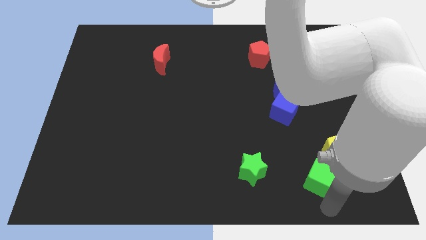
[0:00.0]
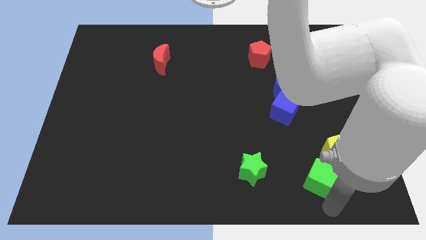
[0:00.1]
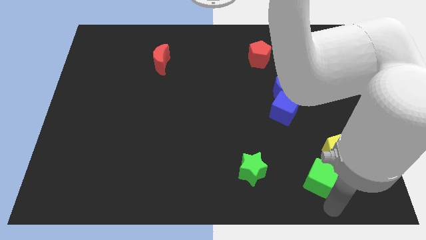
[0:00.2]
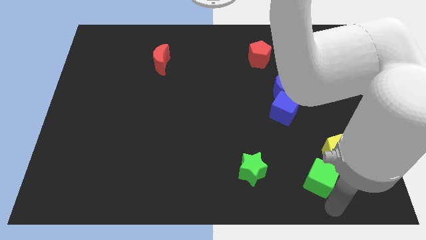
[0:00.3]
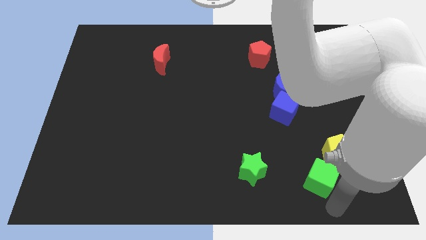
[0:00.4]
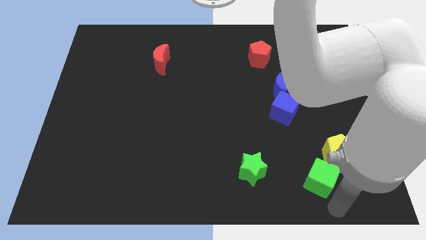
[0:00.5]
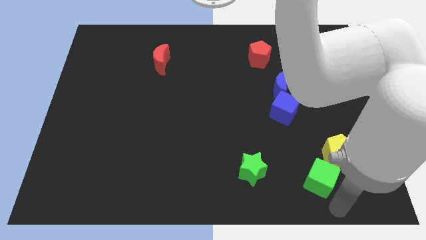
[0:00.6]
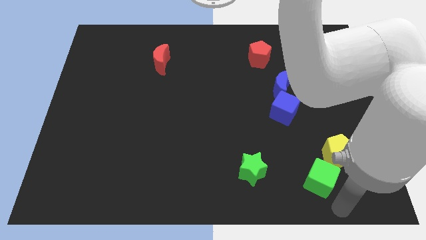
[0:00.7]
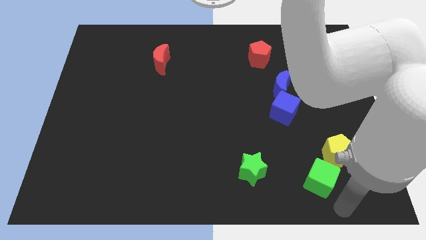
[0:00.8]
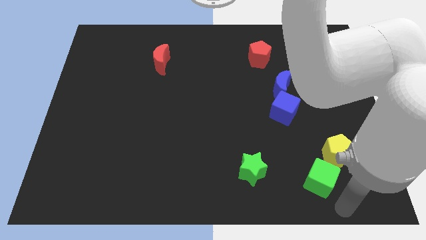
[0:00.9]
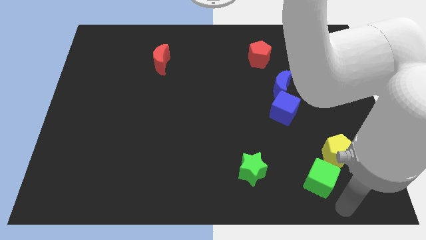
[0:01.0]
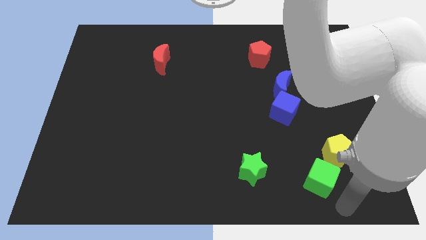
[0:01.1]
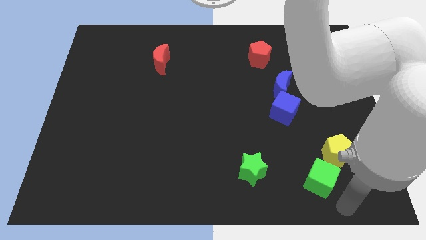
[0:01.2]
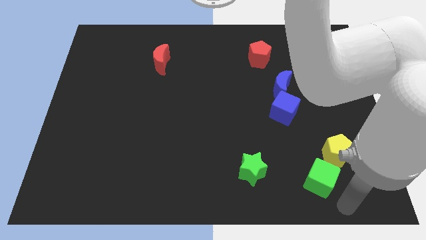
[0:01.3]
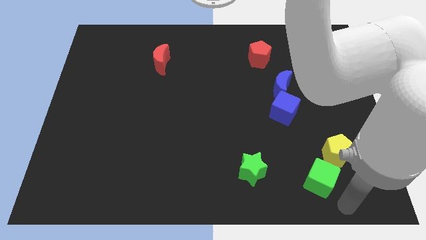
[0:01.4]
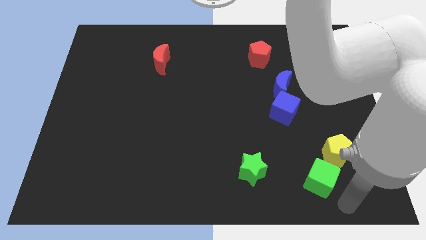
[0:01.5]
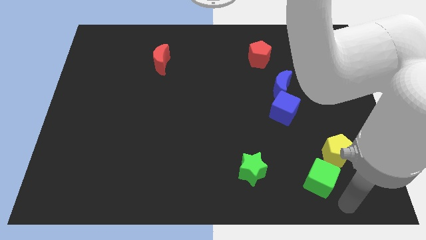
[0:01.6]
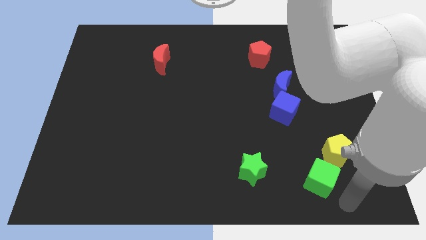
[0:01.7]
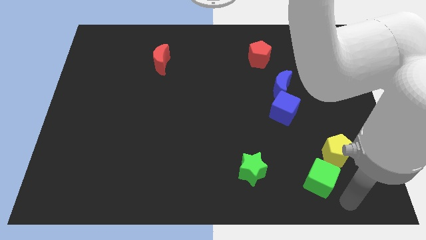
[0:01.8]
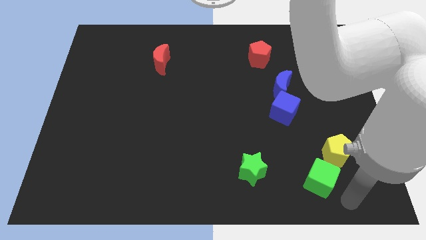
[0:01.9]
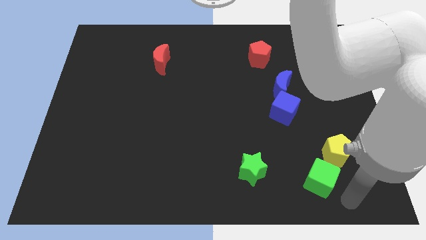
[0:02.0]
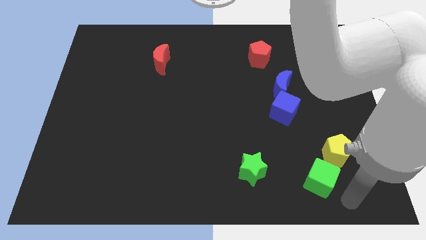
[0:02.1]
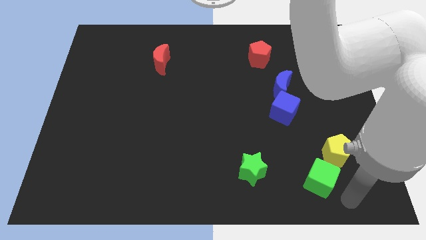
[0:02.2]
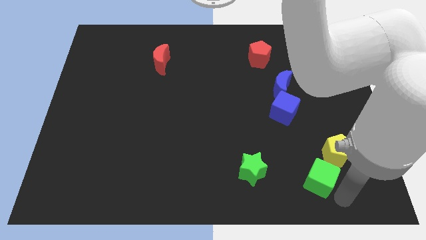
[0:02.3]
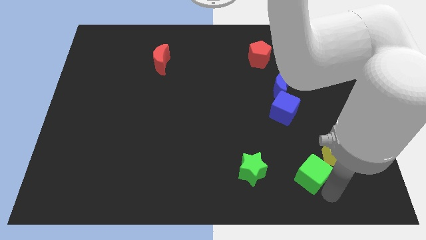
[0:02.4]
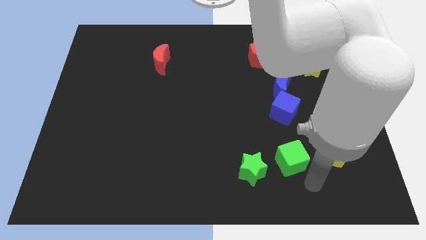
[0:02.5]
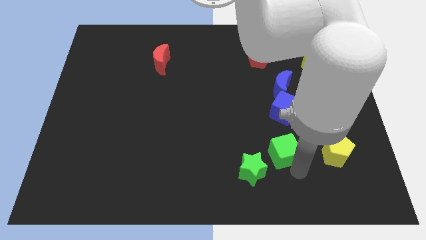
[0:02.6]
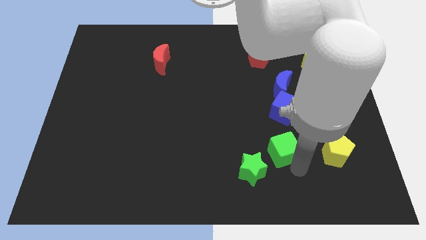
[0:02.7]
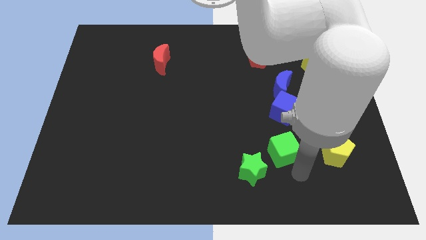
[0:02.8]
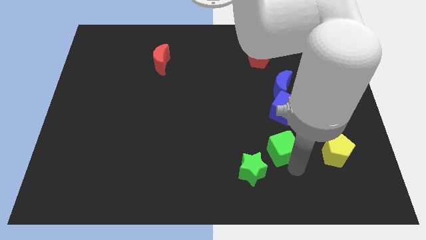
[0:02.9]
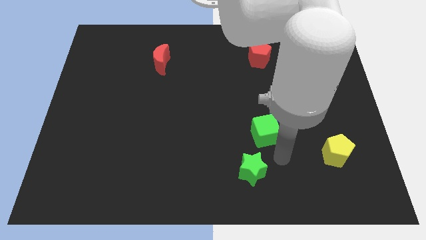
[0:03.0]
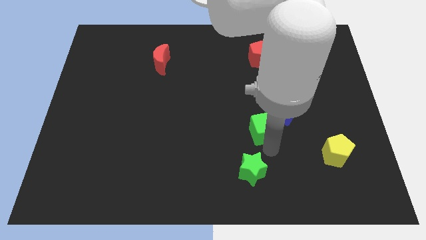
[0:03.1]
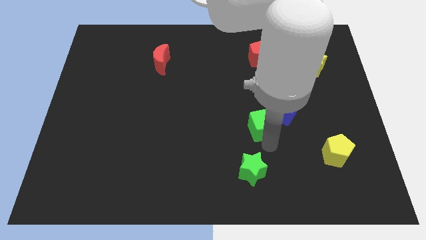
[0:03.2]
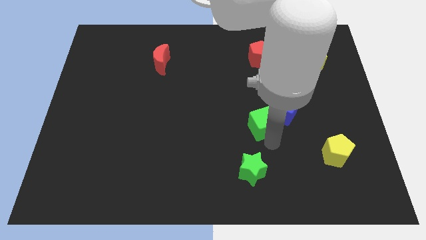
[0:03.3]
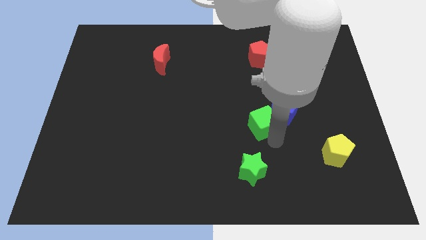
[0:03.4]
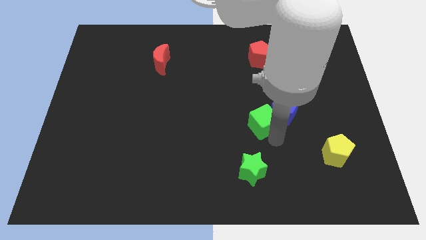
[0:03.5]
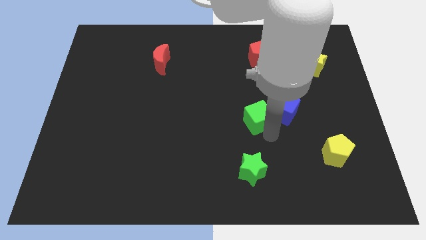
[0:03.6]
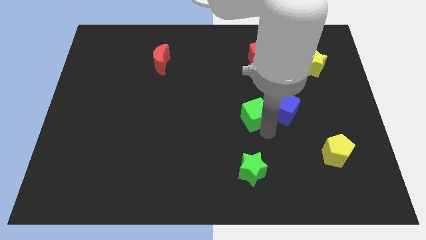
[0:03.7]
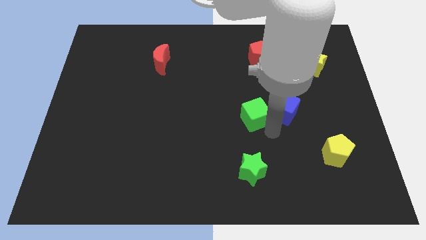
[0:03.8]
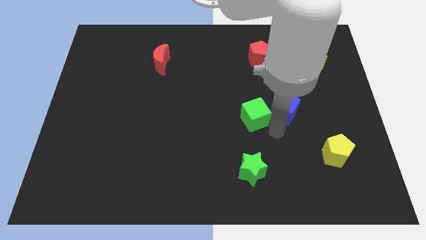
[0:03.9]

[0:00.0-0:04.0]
move the green cube to the center of the board

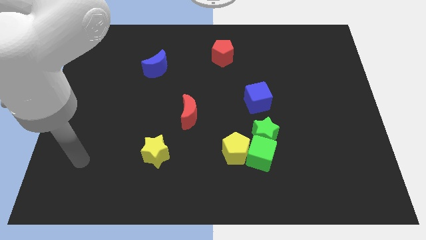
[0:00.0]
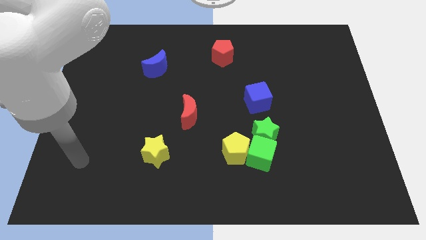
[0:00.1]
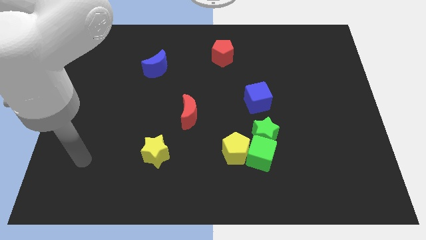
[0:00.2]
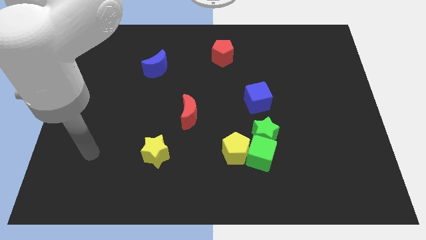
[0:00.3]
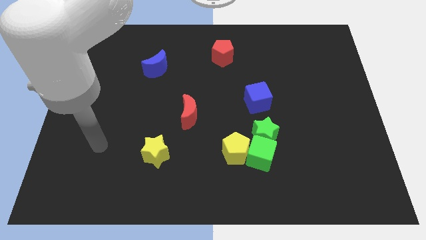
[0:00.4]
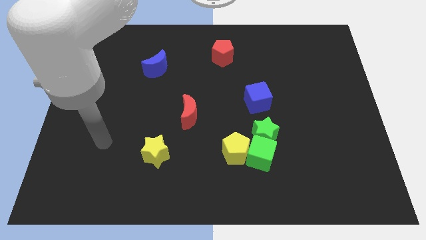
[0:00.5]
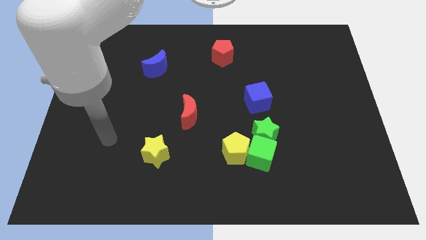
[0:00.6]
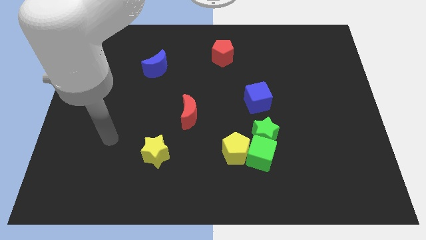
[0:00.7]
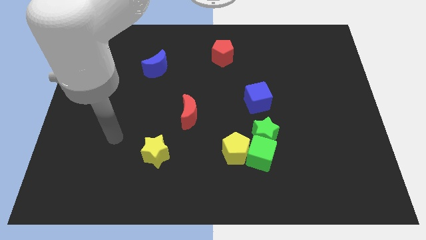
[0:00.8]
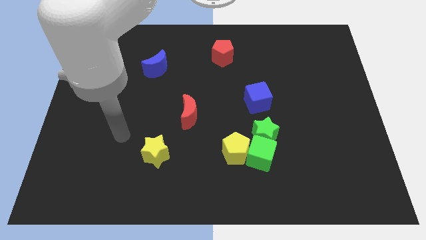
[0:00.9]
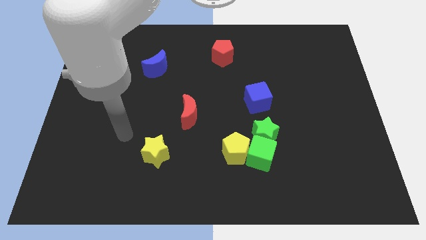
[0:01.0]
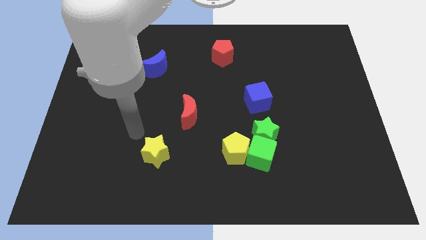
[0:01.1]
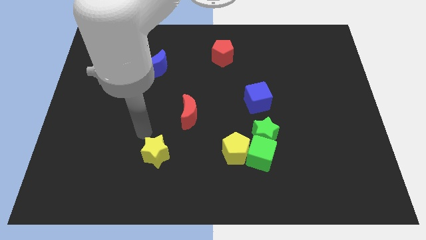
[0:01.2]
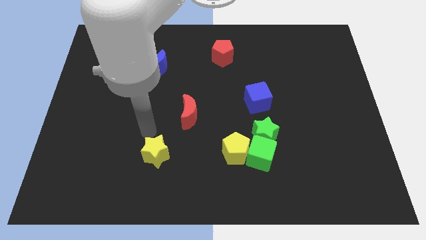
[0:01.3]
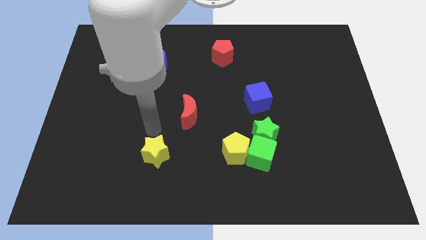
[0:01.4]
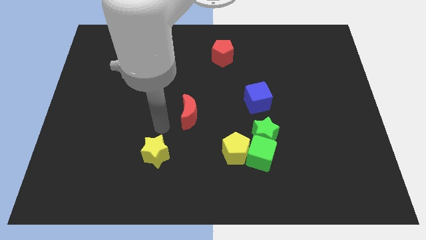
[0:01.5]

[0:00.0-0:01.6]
point your arm at the top of the yellow star

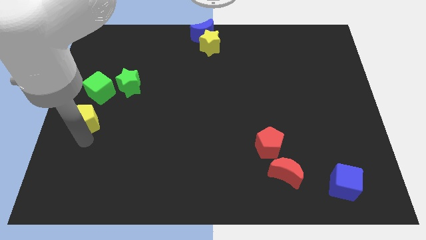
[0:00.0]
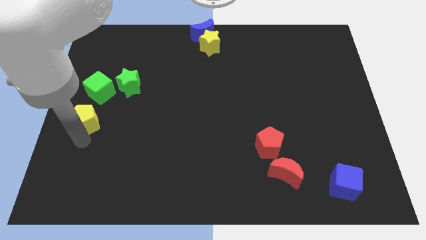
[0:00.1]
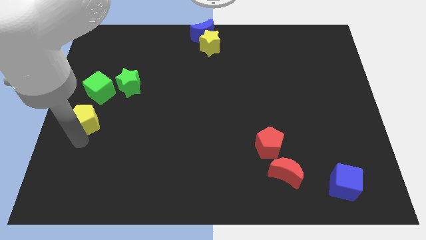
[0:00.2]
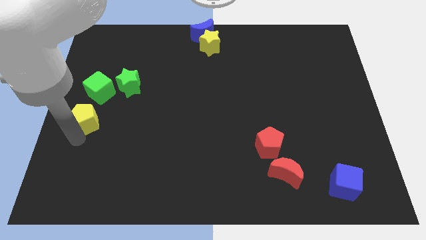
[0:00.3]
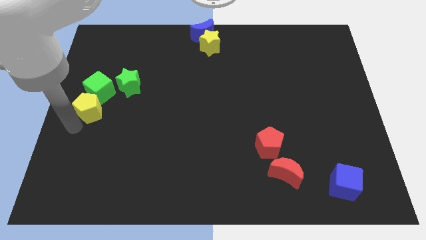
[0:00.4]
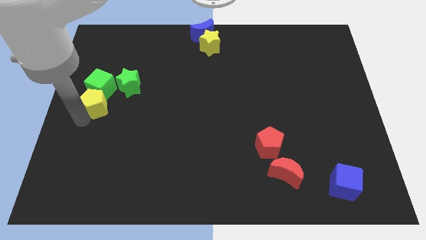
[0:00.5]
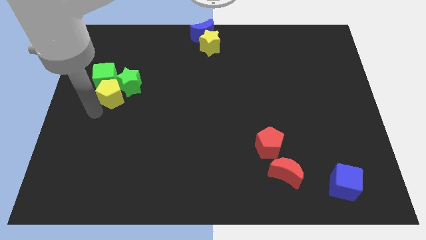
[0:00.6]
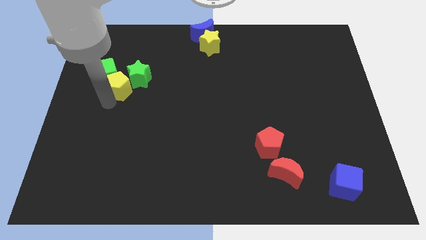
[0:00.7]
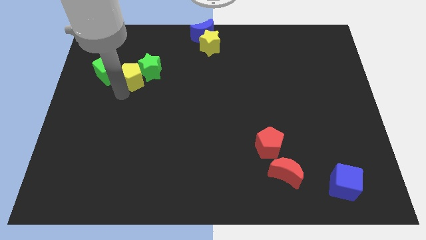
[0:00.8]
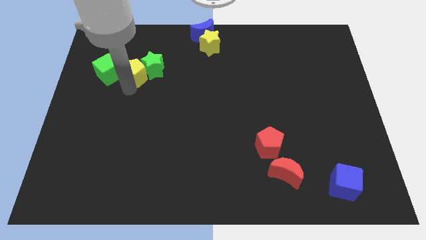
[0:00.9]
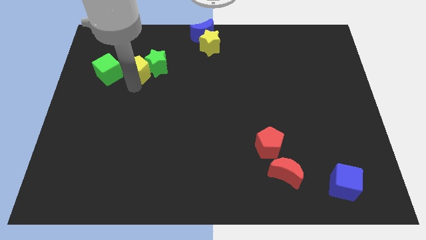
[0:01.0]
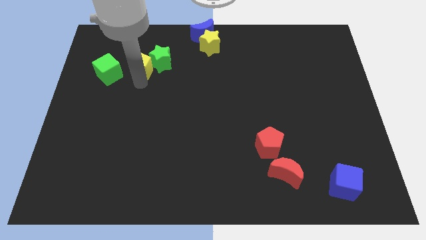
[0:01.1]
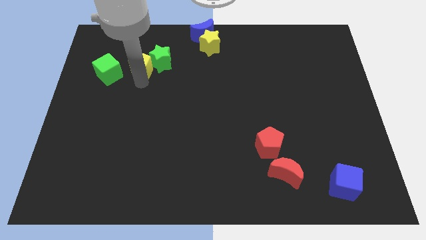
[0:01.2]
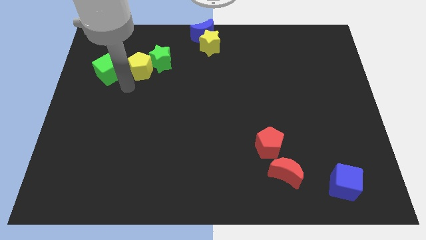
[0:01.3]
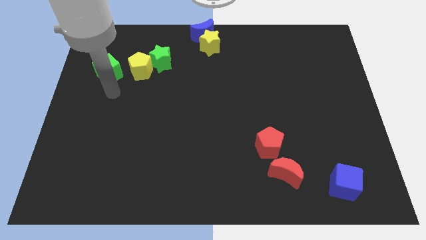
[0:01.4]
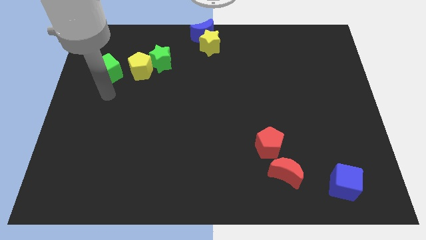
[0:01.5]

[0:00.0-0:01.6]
push the yellow pentagon in between green star and green cube

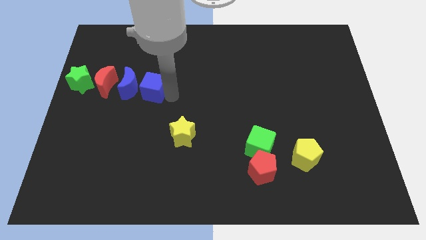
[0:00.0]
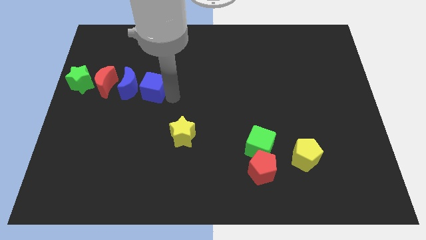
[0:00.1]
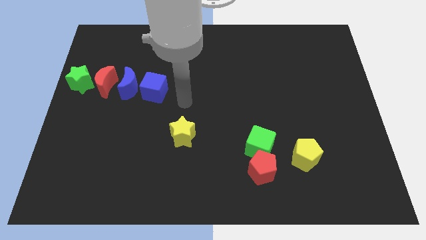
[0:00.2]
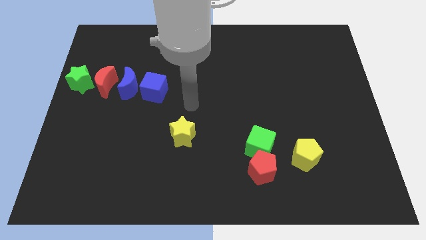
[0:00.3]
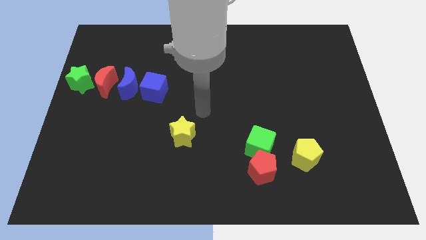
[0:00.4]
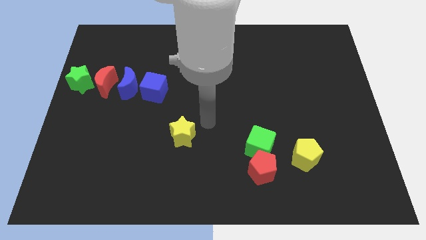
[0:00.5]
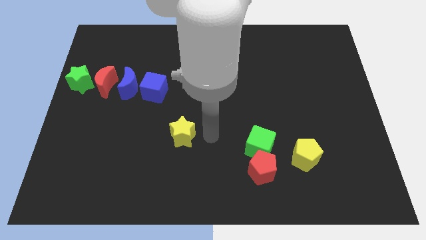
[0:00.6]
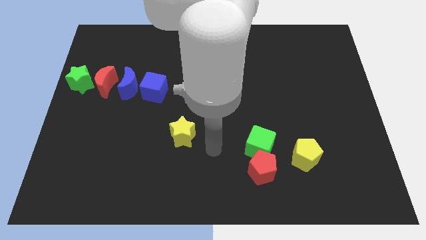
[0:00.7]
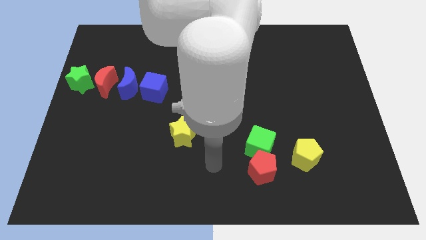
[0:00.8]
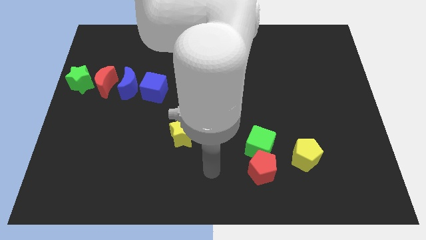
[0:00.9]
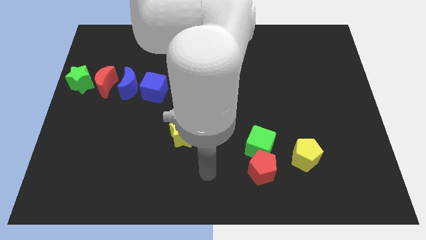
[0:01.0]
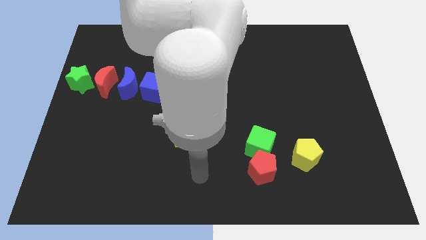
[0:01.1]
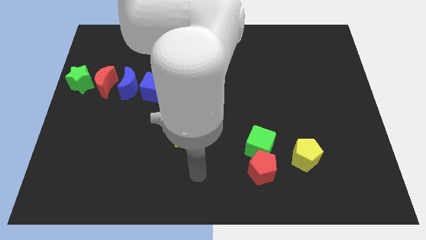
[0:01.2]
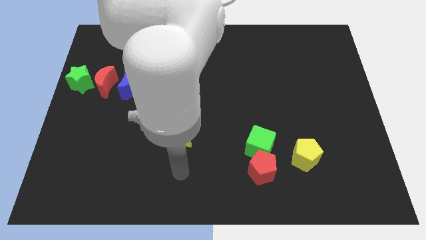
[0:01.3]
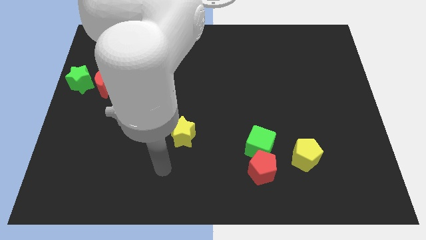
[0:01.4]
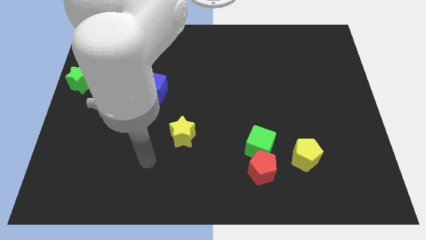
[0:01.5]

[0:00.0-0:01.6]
move away from the blue cube

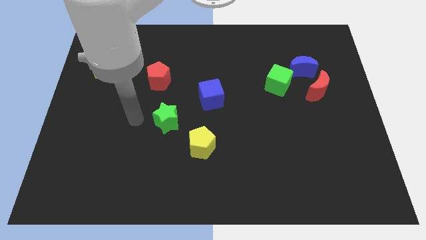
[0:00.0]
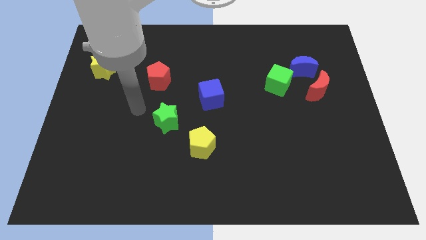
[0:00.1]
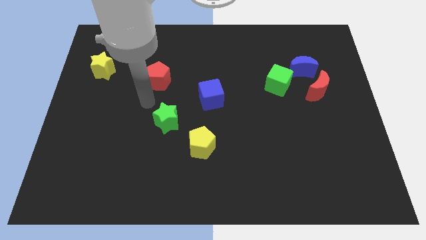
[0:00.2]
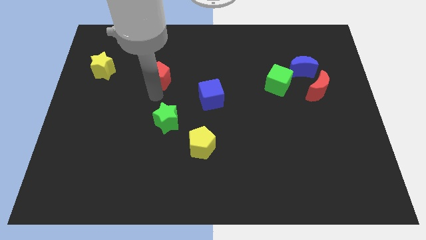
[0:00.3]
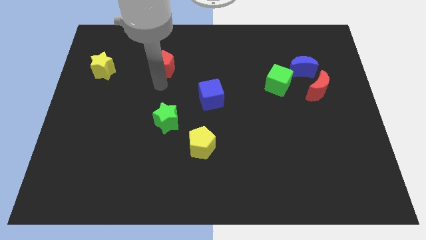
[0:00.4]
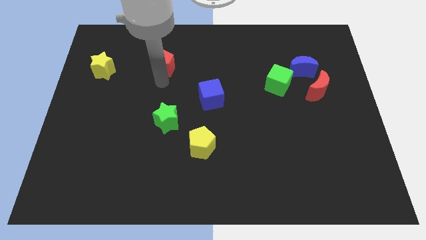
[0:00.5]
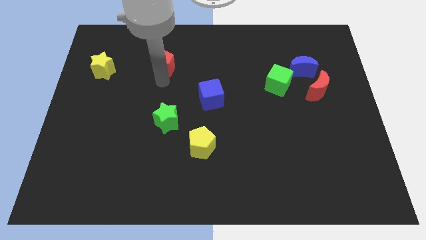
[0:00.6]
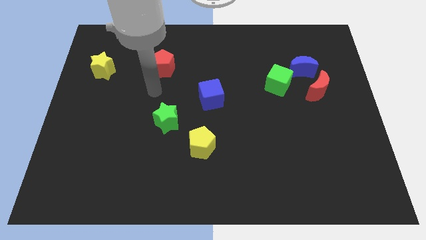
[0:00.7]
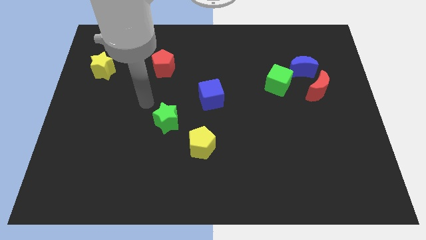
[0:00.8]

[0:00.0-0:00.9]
push the red pentagon upwards slightly
